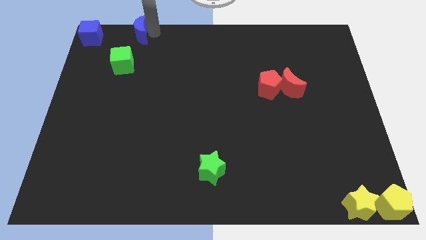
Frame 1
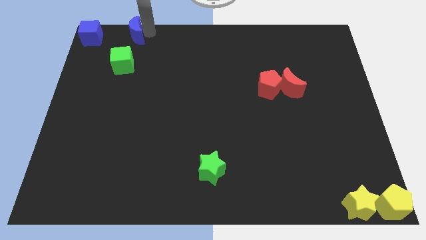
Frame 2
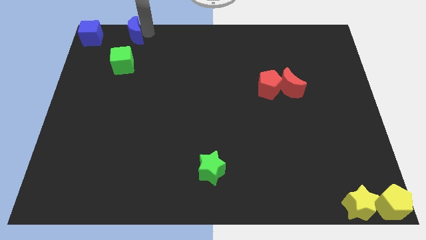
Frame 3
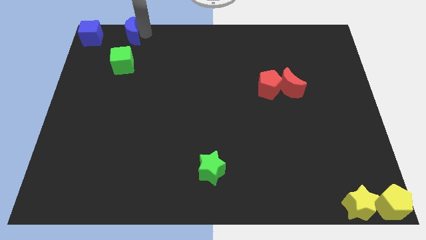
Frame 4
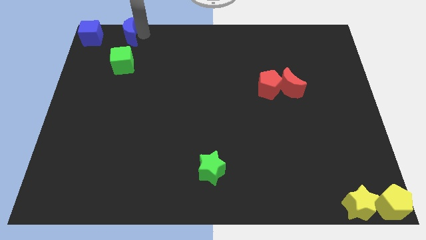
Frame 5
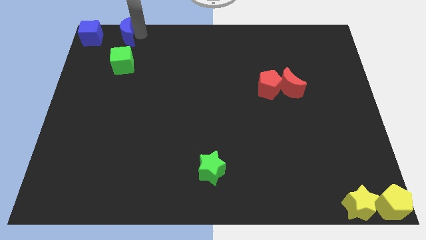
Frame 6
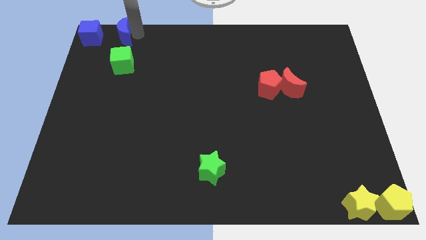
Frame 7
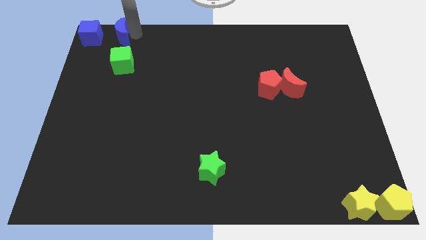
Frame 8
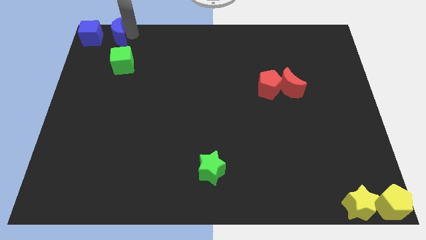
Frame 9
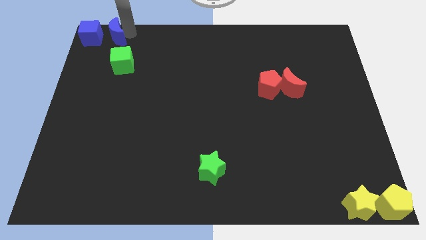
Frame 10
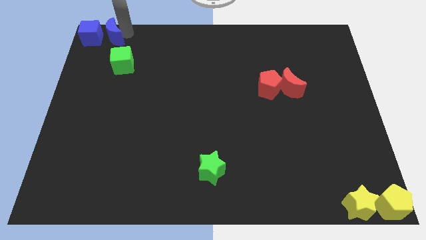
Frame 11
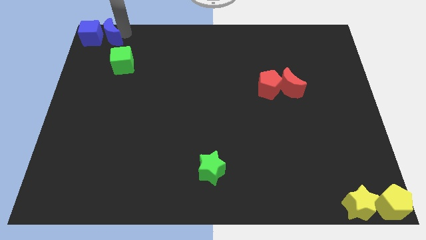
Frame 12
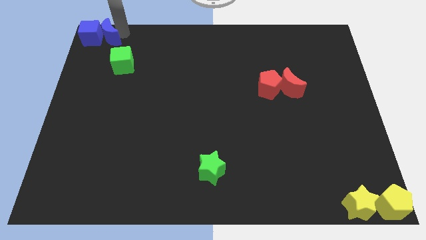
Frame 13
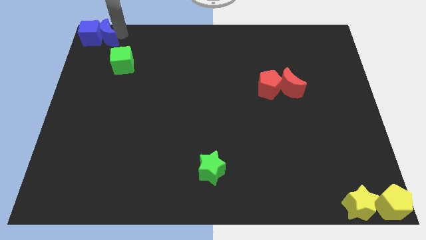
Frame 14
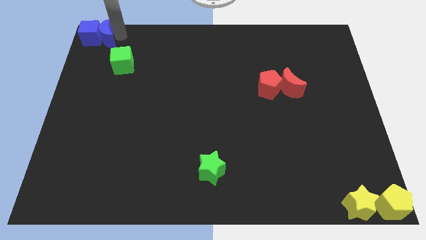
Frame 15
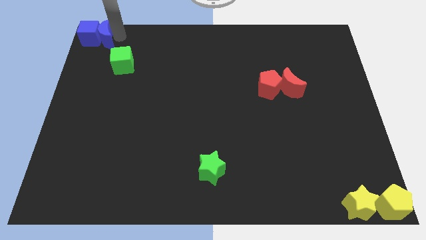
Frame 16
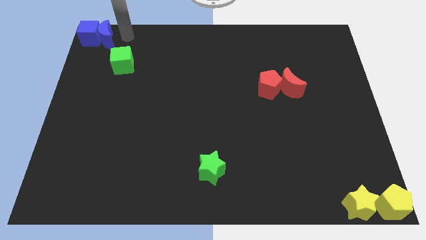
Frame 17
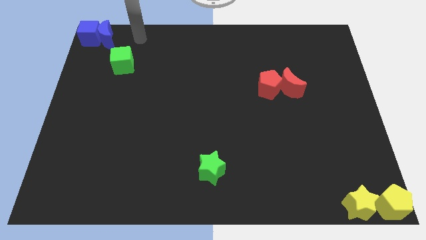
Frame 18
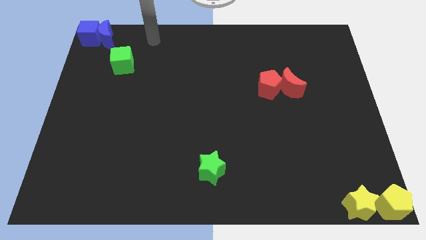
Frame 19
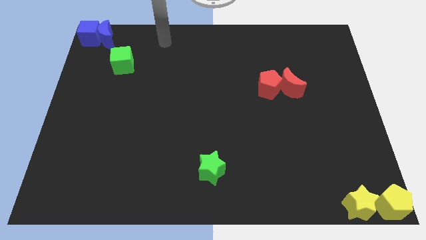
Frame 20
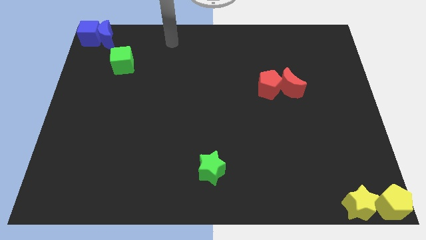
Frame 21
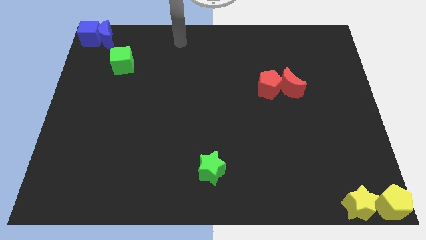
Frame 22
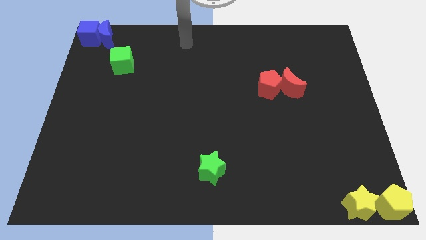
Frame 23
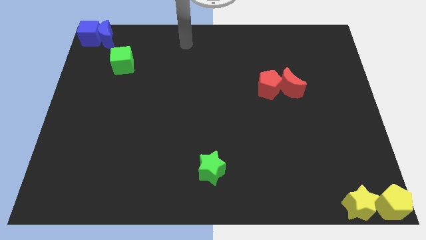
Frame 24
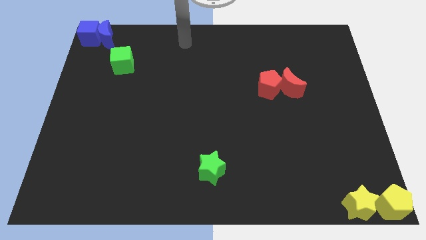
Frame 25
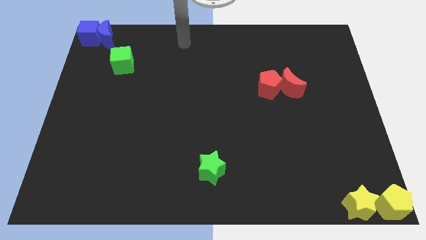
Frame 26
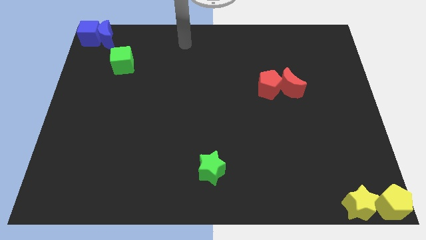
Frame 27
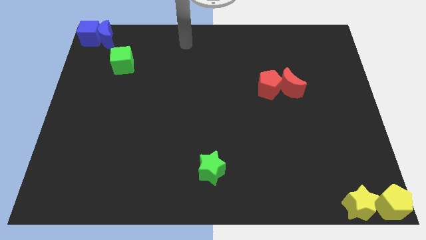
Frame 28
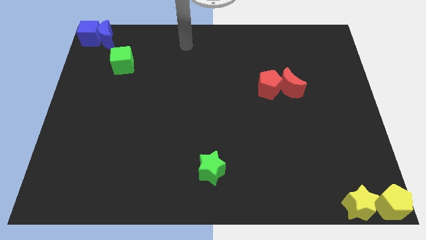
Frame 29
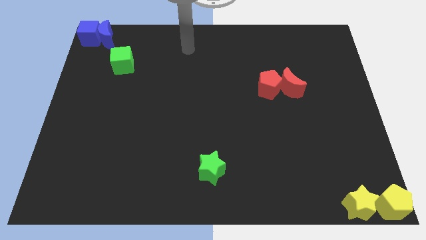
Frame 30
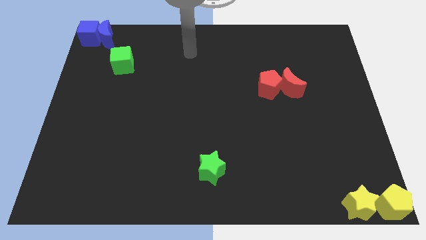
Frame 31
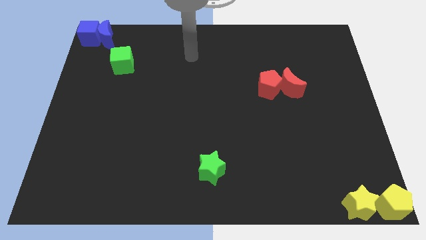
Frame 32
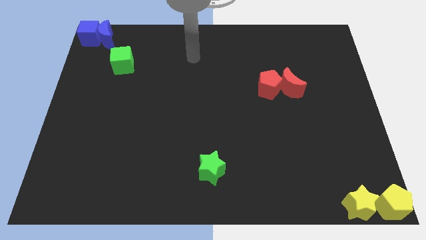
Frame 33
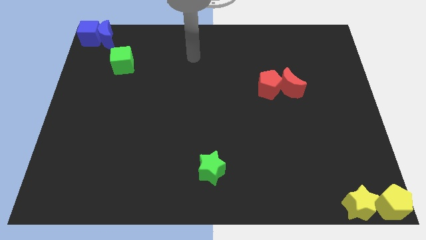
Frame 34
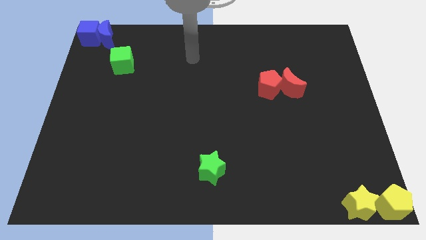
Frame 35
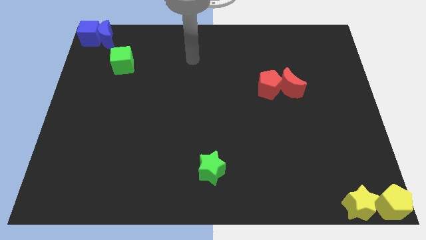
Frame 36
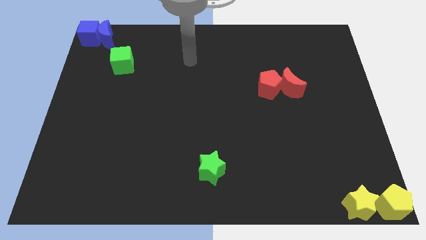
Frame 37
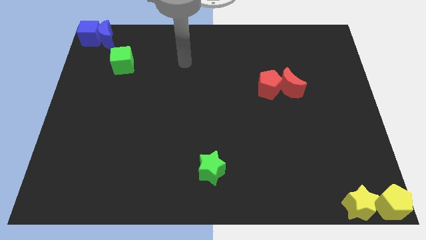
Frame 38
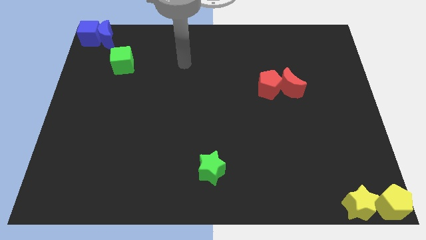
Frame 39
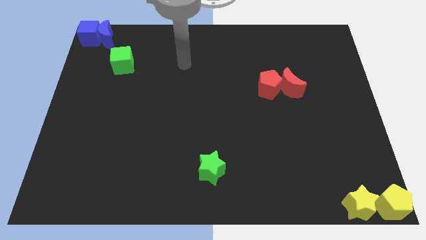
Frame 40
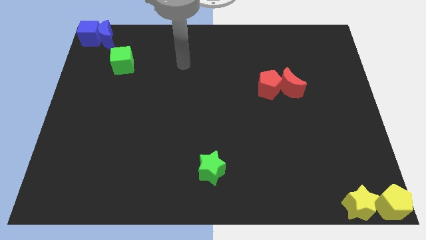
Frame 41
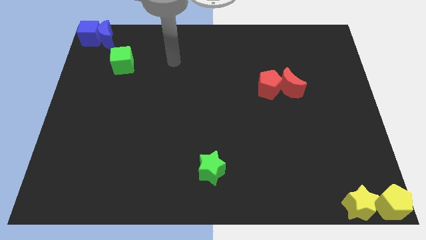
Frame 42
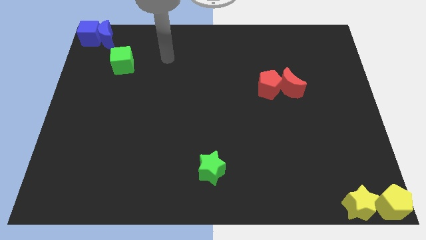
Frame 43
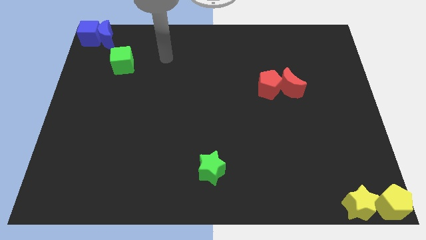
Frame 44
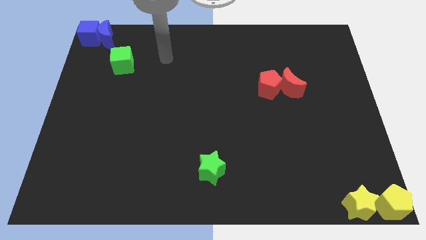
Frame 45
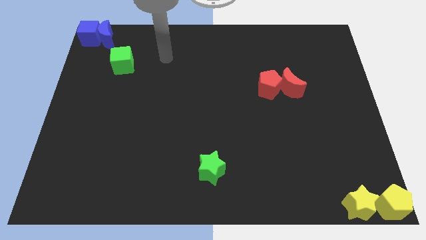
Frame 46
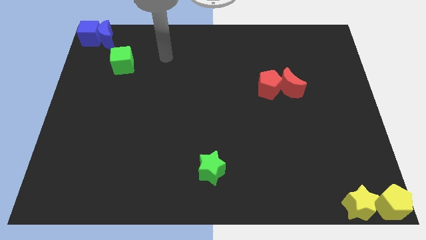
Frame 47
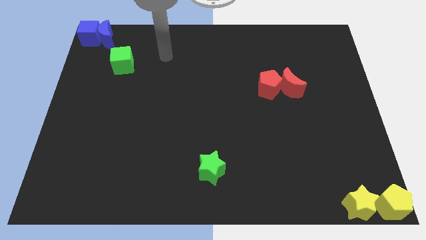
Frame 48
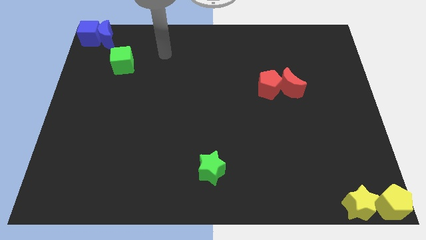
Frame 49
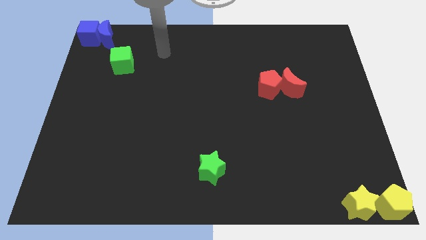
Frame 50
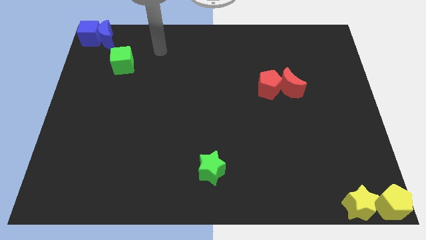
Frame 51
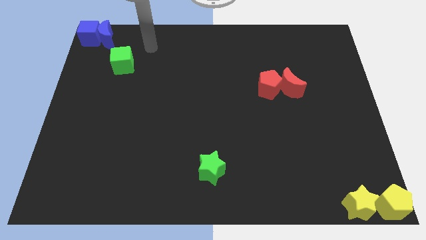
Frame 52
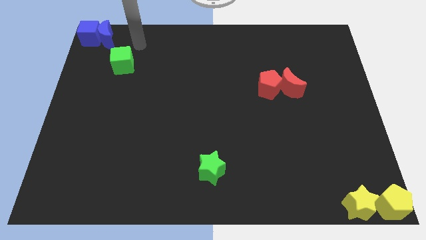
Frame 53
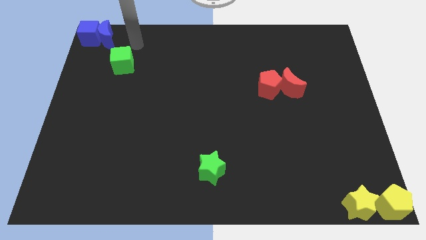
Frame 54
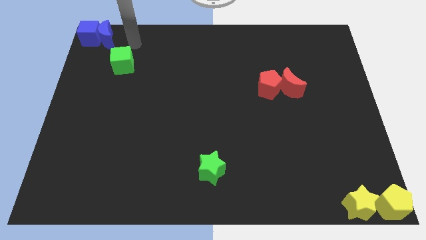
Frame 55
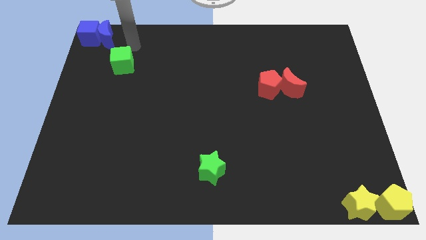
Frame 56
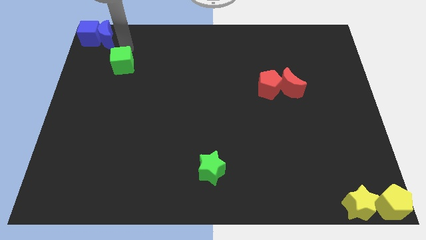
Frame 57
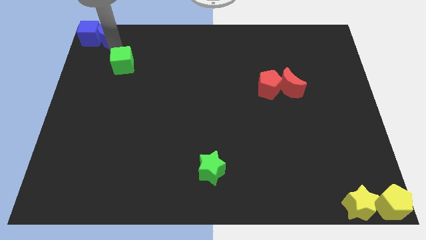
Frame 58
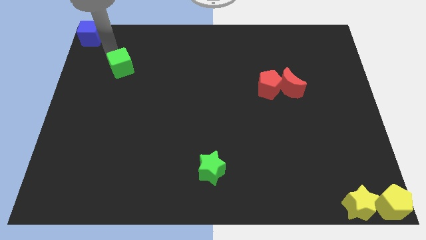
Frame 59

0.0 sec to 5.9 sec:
put the blue semicircle into the blue cube

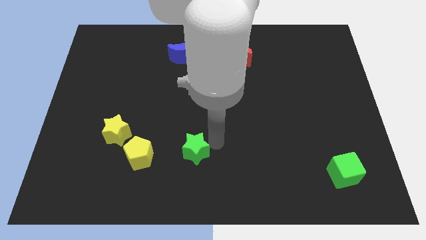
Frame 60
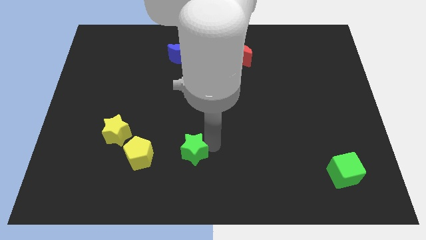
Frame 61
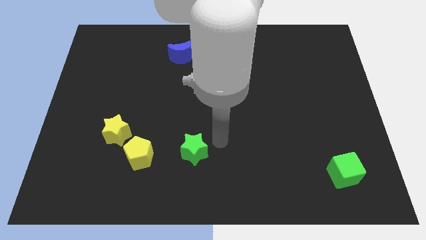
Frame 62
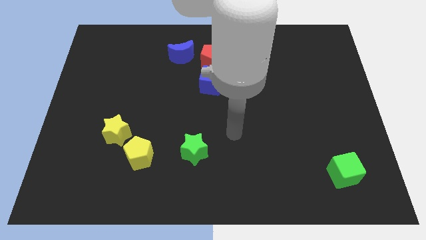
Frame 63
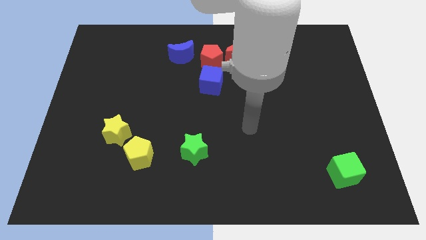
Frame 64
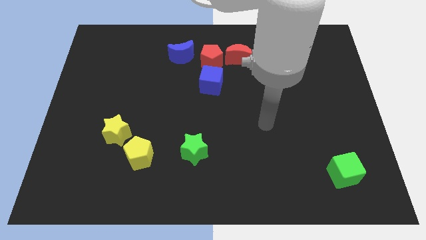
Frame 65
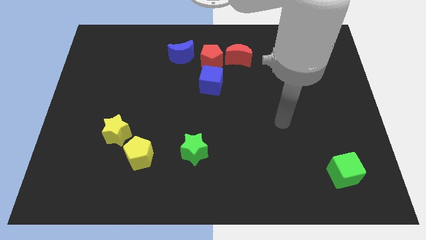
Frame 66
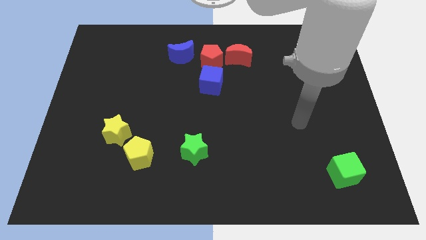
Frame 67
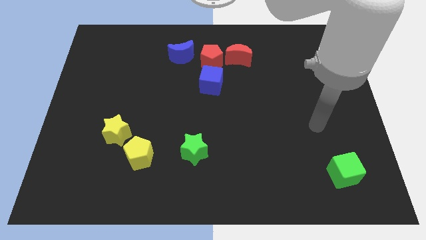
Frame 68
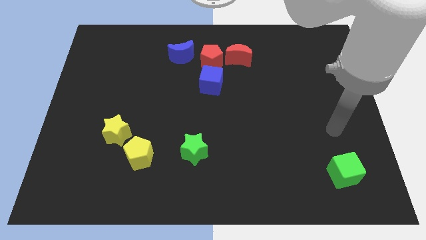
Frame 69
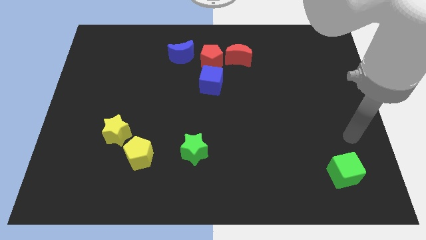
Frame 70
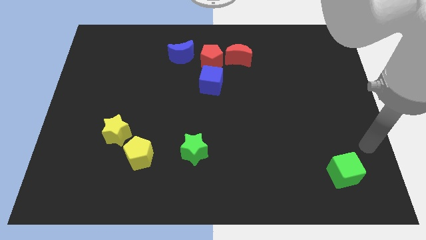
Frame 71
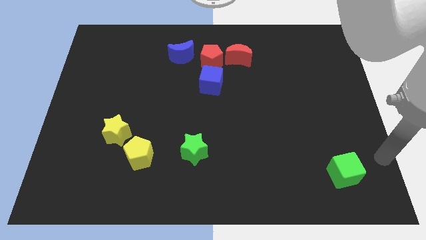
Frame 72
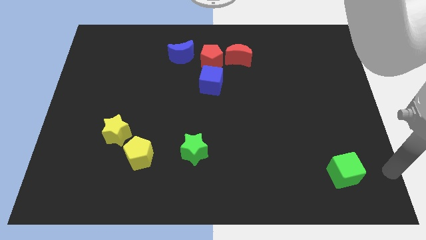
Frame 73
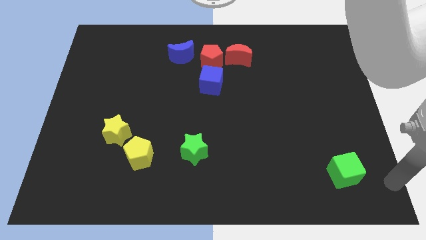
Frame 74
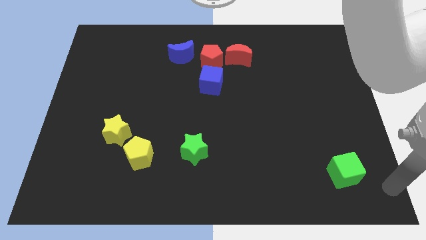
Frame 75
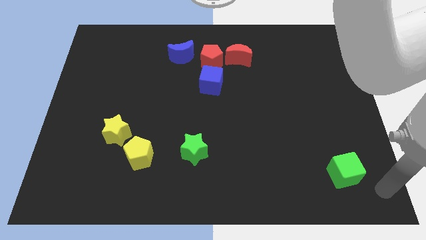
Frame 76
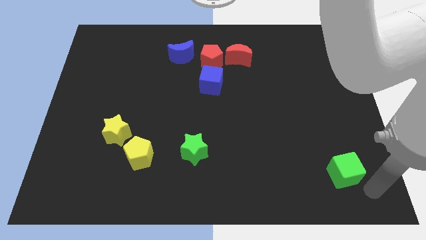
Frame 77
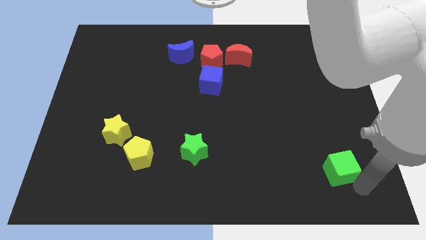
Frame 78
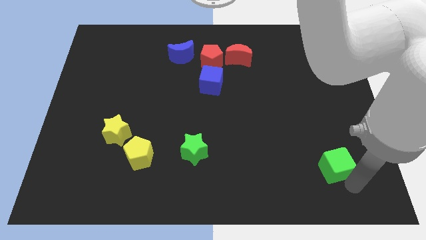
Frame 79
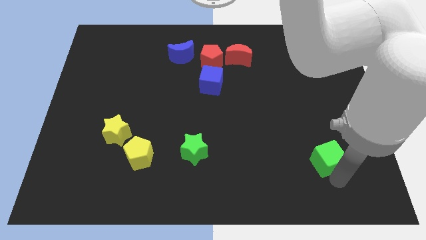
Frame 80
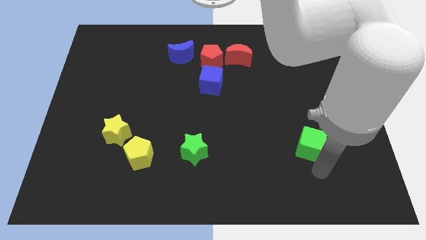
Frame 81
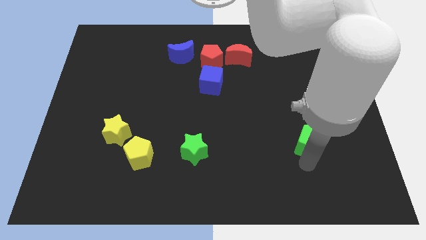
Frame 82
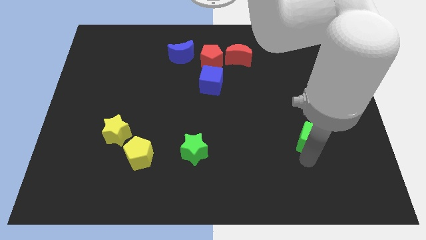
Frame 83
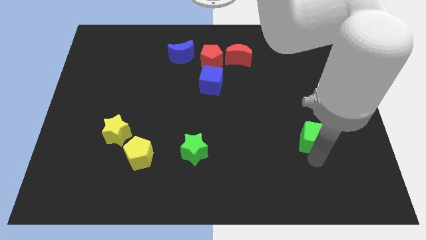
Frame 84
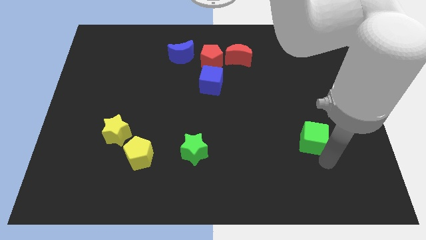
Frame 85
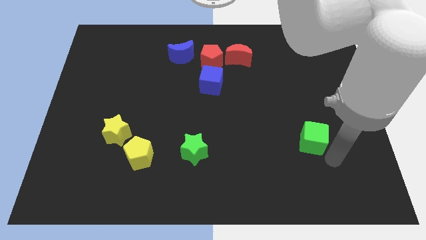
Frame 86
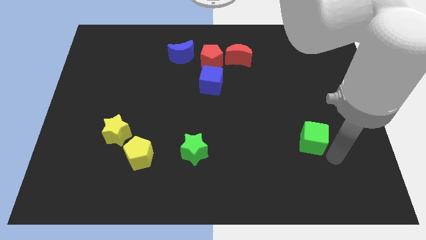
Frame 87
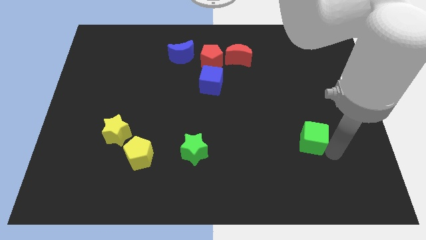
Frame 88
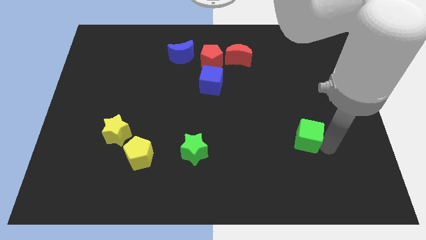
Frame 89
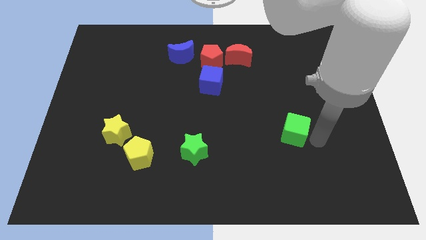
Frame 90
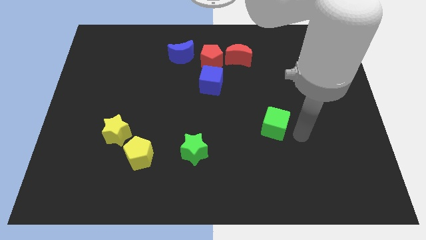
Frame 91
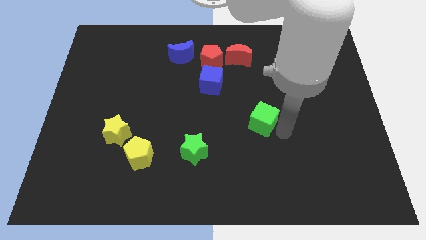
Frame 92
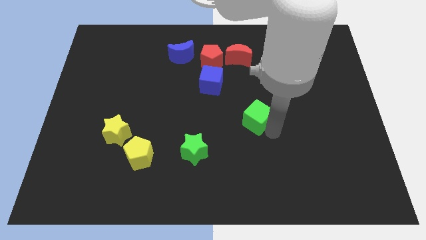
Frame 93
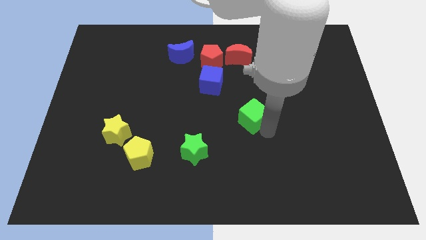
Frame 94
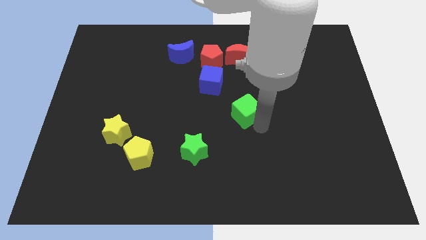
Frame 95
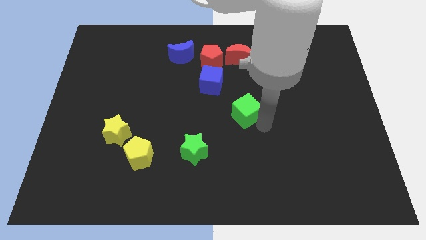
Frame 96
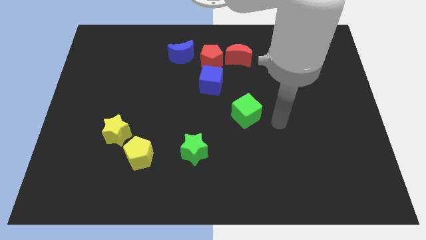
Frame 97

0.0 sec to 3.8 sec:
place the green cube diagonally top right to the green star
